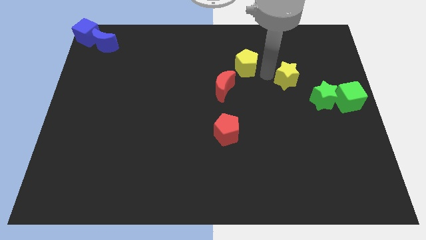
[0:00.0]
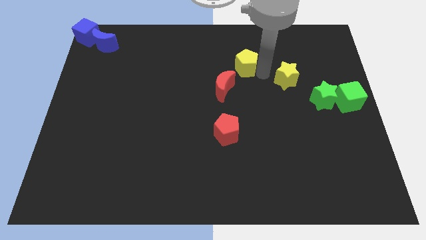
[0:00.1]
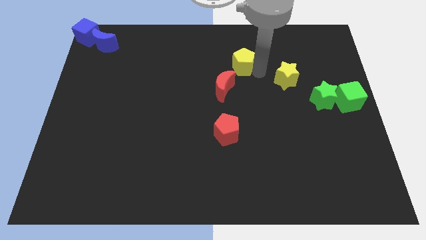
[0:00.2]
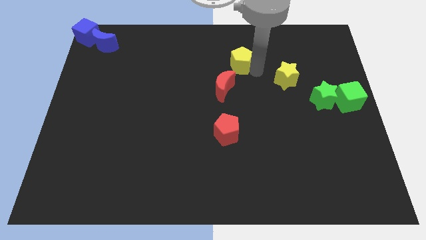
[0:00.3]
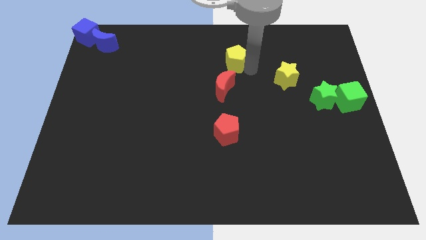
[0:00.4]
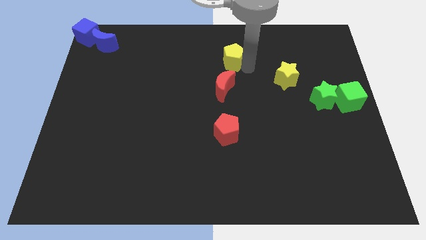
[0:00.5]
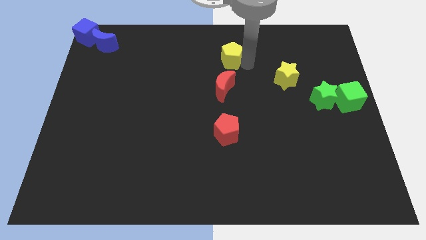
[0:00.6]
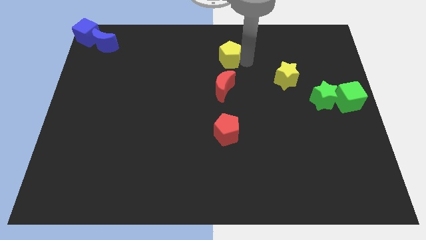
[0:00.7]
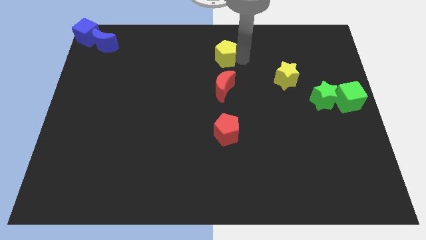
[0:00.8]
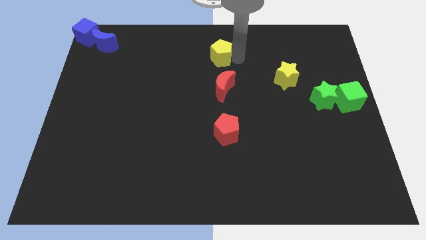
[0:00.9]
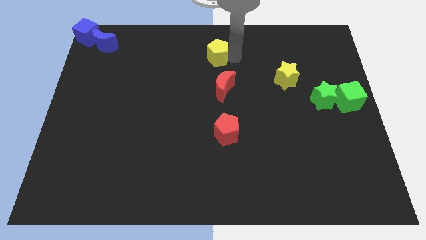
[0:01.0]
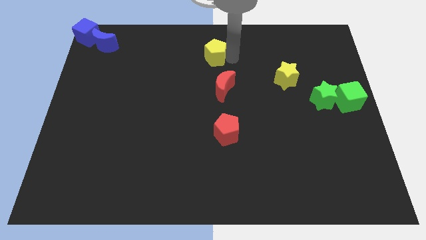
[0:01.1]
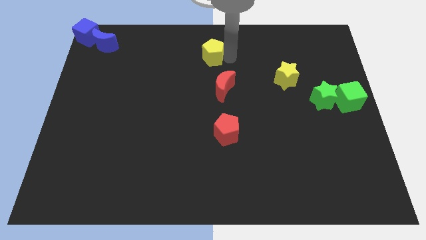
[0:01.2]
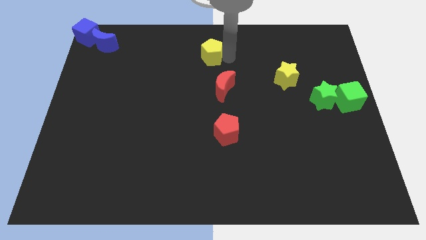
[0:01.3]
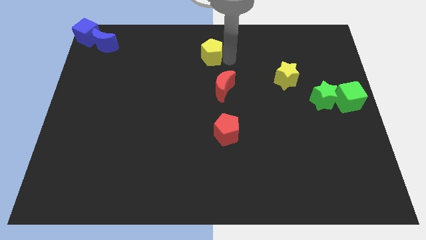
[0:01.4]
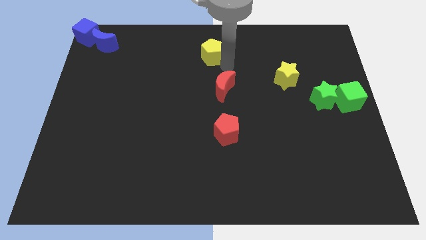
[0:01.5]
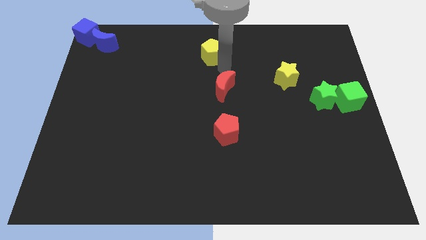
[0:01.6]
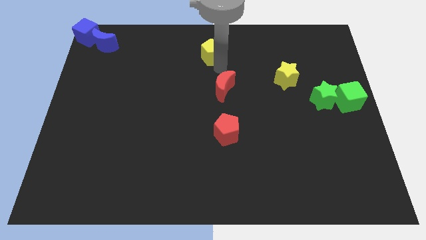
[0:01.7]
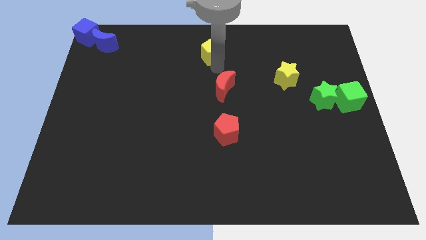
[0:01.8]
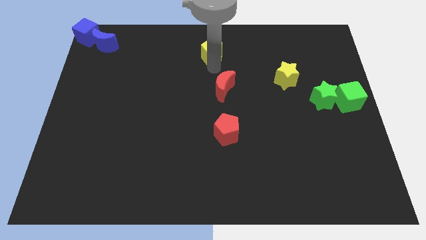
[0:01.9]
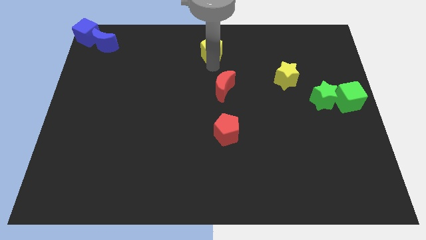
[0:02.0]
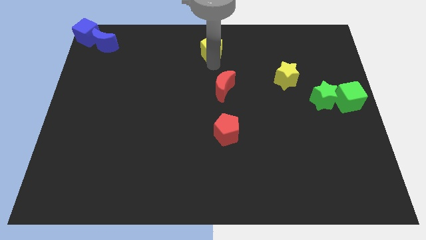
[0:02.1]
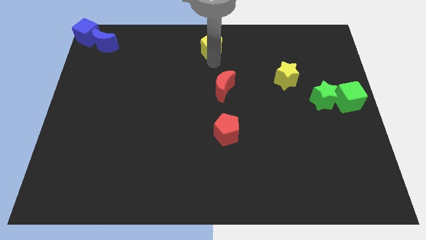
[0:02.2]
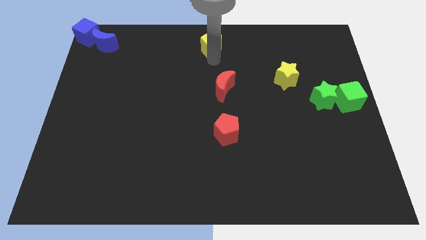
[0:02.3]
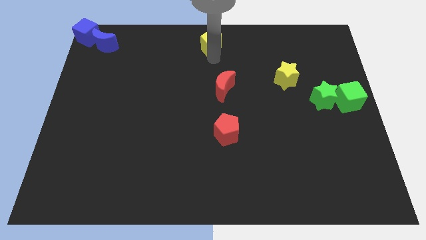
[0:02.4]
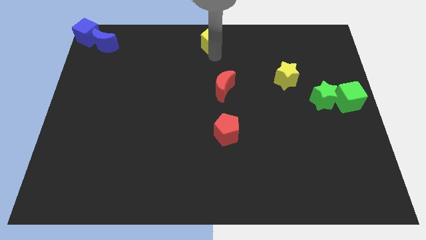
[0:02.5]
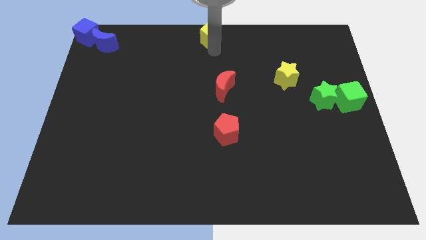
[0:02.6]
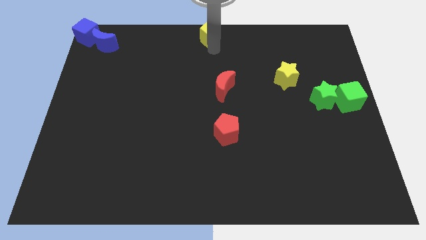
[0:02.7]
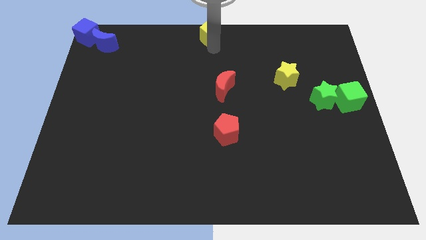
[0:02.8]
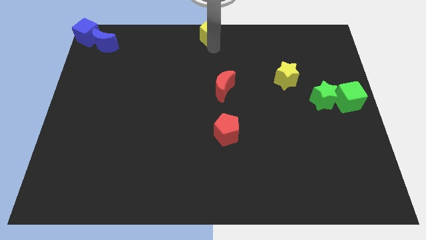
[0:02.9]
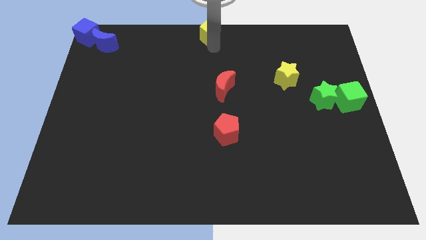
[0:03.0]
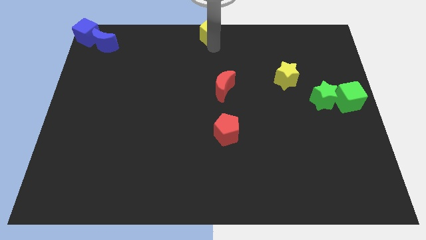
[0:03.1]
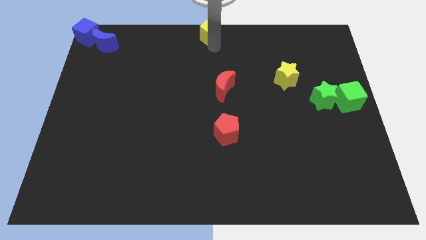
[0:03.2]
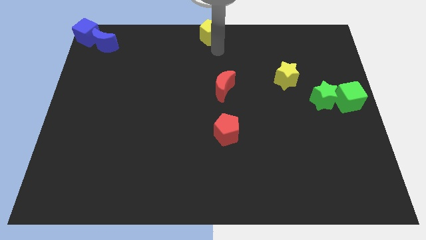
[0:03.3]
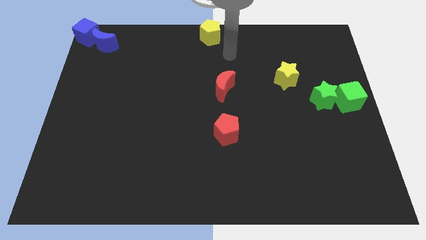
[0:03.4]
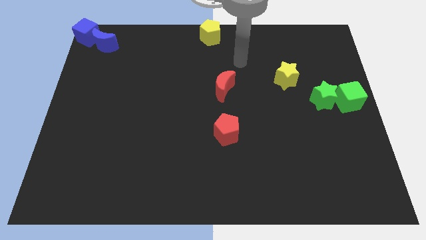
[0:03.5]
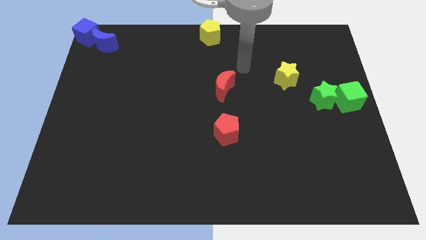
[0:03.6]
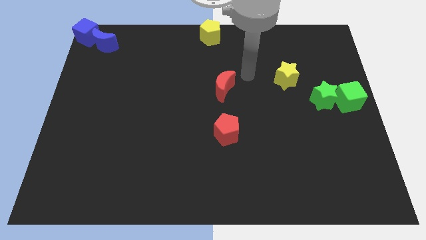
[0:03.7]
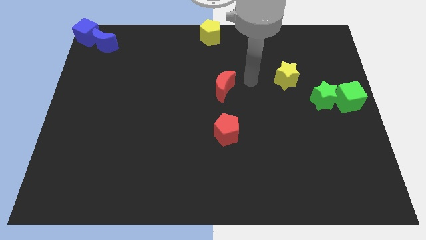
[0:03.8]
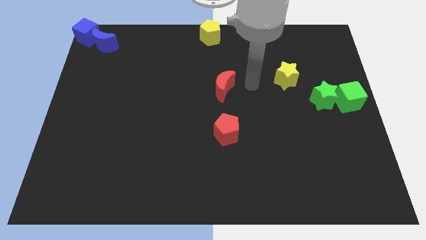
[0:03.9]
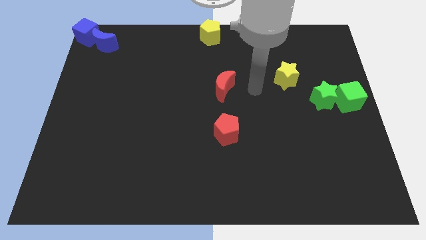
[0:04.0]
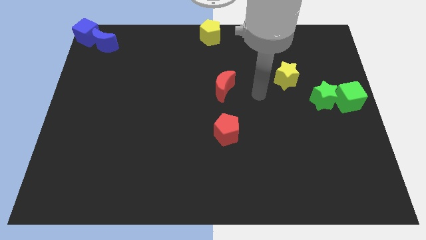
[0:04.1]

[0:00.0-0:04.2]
push yellow pentagon to the top center

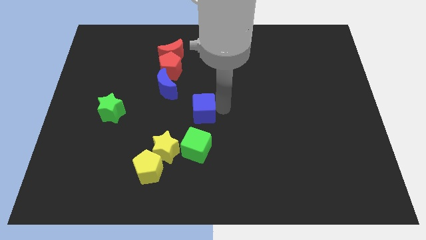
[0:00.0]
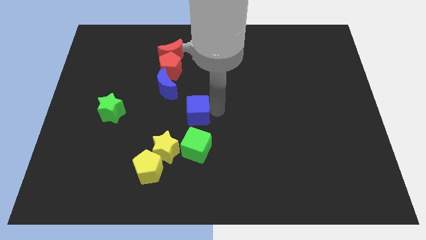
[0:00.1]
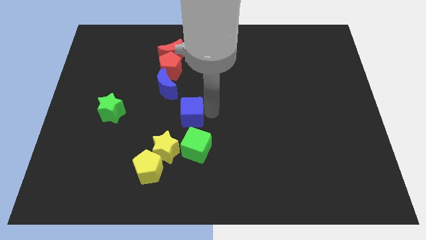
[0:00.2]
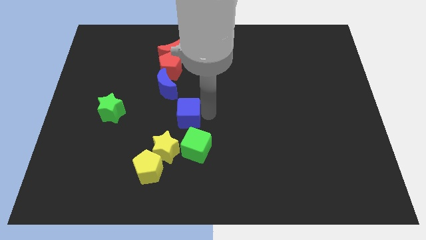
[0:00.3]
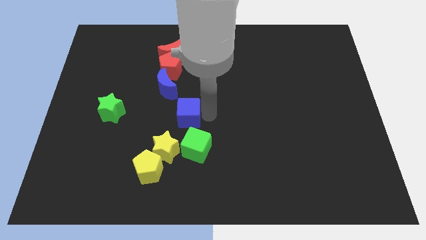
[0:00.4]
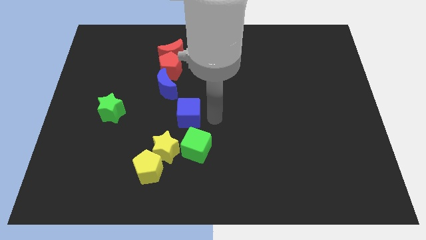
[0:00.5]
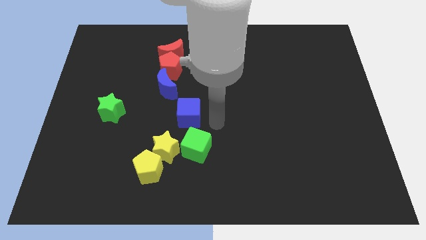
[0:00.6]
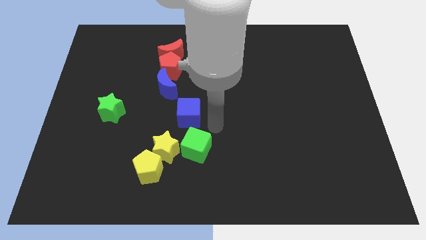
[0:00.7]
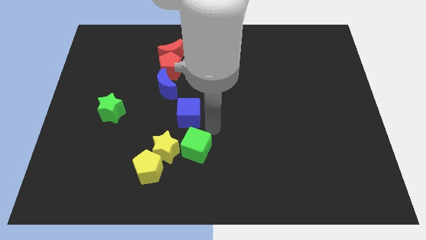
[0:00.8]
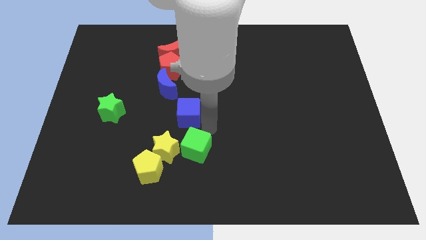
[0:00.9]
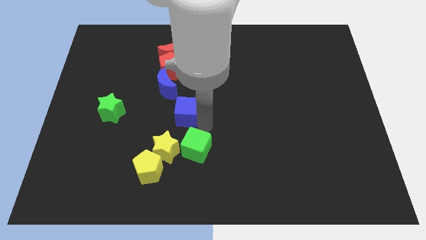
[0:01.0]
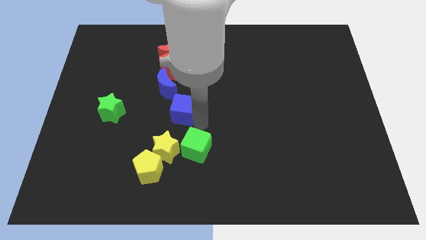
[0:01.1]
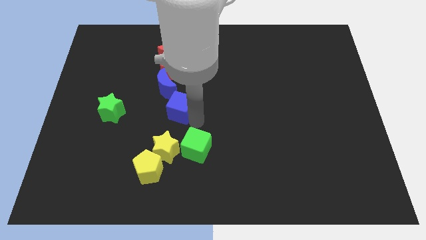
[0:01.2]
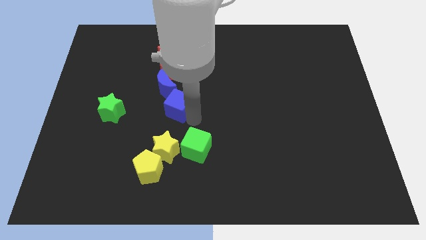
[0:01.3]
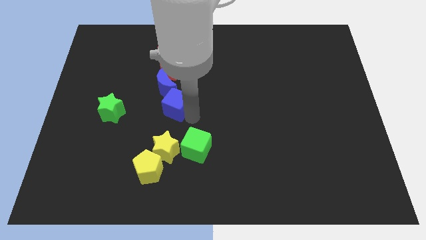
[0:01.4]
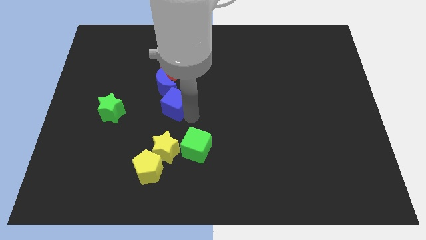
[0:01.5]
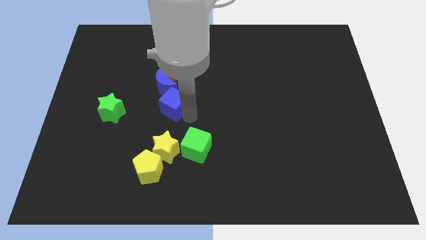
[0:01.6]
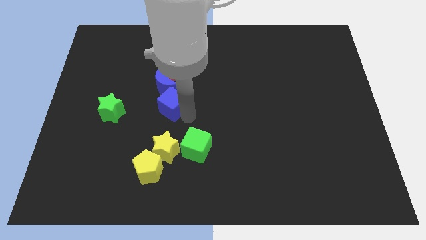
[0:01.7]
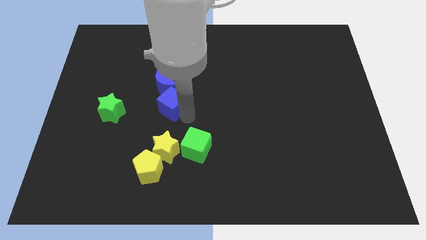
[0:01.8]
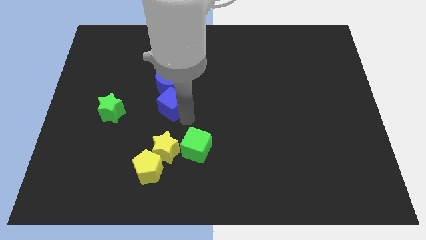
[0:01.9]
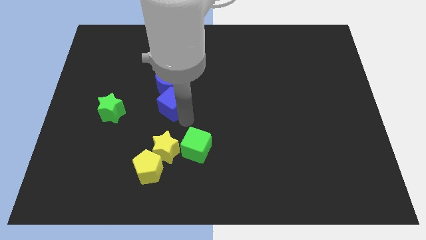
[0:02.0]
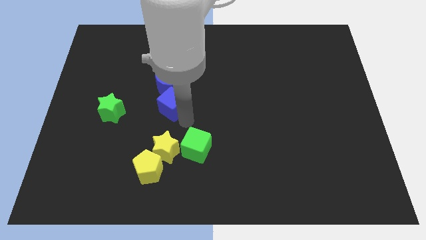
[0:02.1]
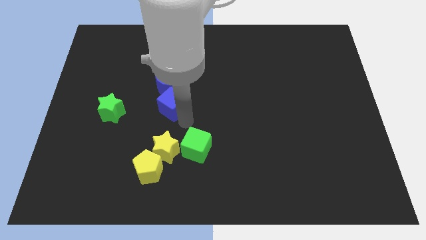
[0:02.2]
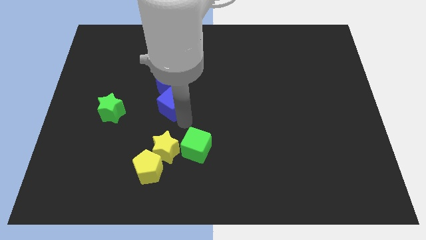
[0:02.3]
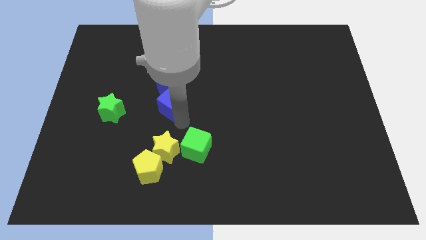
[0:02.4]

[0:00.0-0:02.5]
place the blue cube below into blue moon

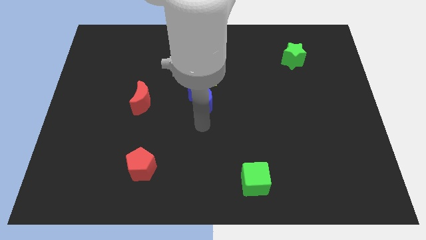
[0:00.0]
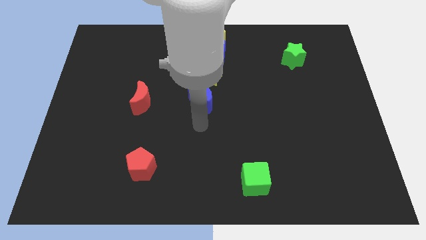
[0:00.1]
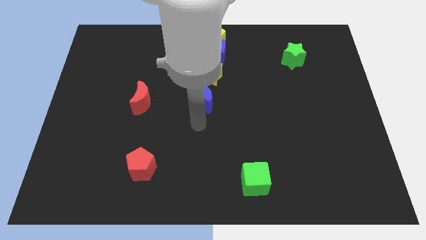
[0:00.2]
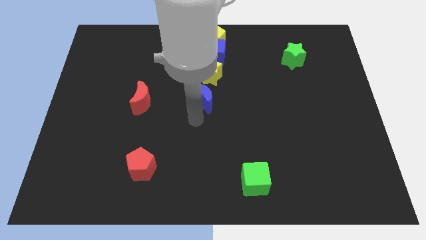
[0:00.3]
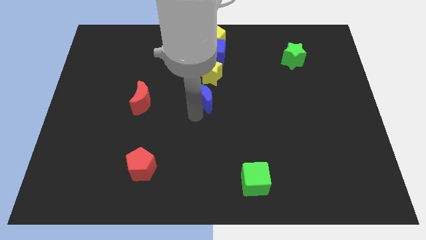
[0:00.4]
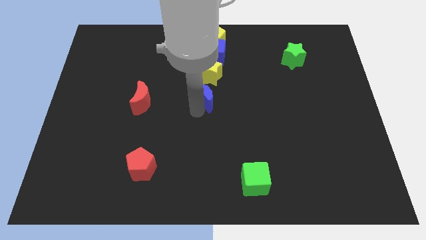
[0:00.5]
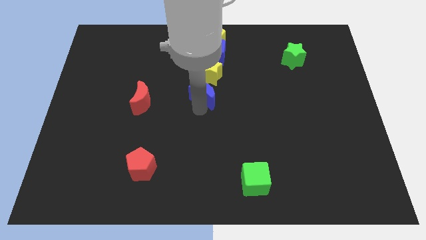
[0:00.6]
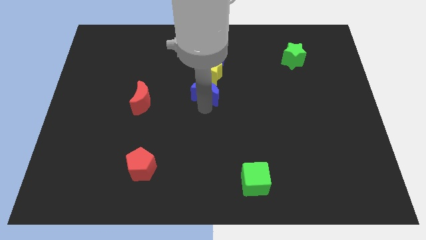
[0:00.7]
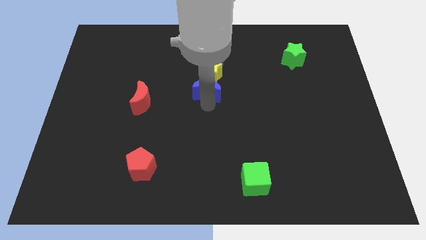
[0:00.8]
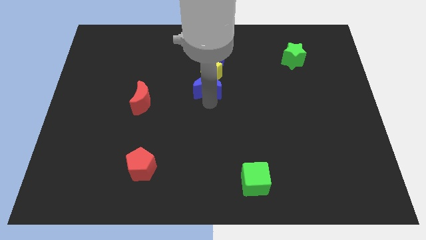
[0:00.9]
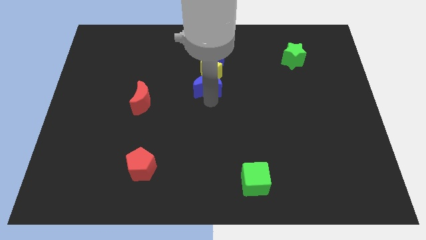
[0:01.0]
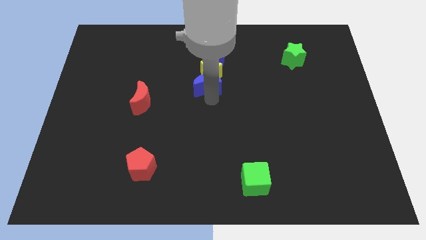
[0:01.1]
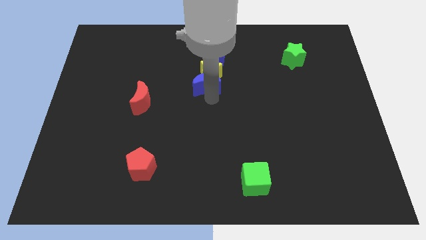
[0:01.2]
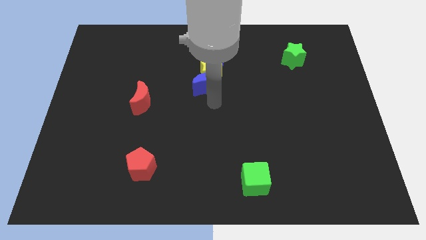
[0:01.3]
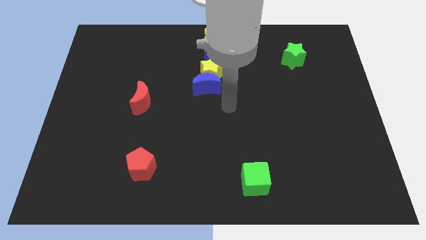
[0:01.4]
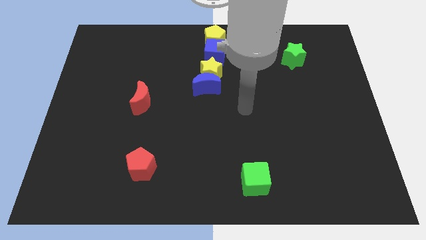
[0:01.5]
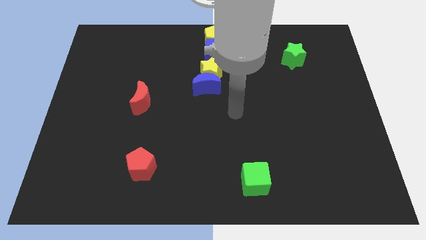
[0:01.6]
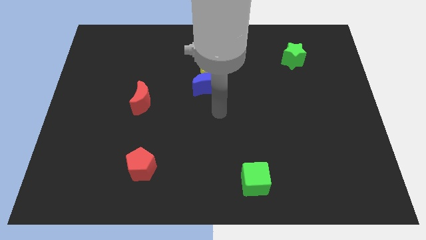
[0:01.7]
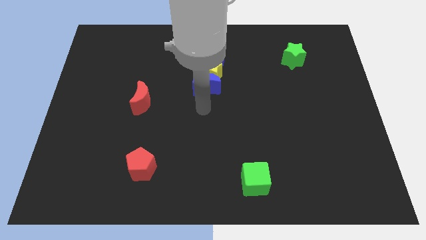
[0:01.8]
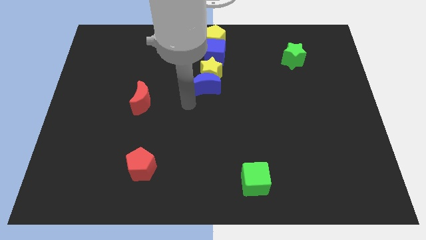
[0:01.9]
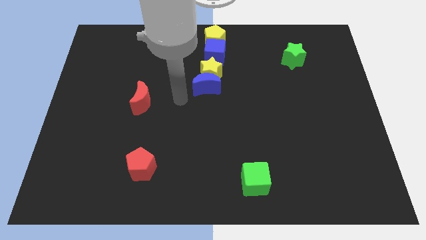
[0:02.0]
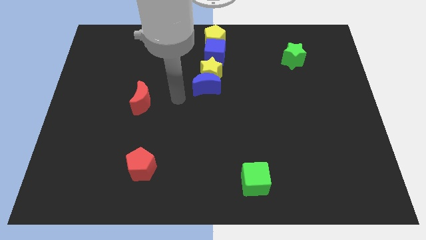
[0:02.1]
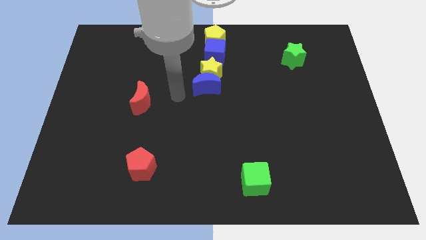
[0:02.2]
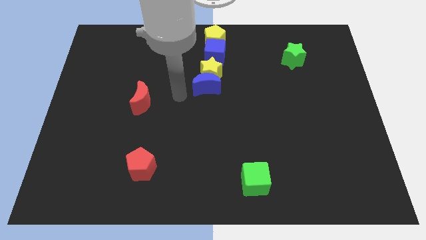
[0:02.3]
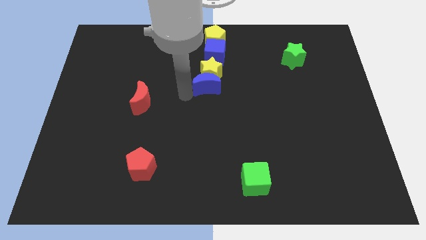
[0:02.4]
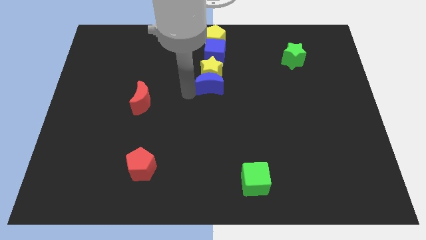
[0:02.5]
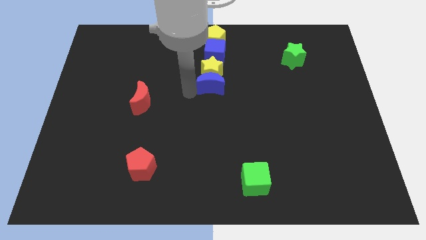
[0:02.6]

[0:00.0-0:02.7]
place the blue moon below the yellow star
